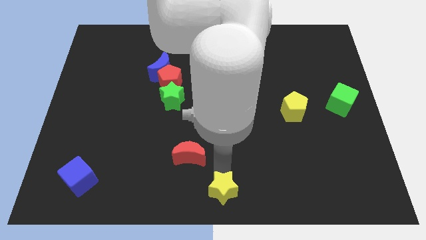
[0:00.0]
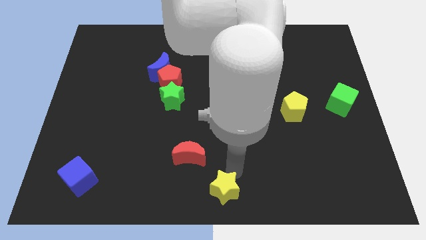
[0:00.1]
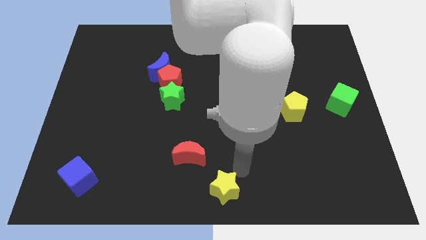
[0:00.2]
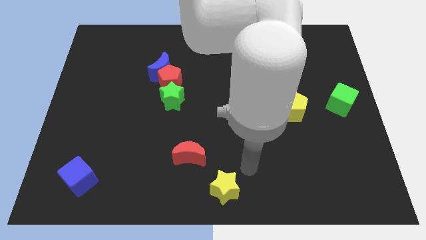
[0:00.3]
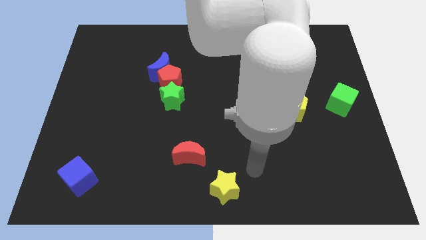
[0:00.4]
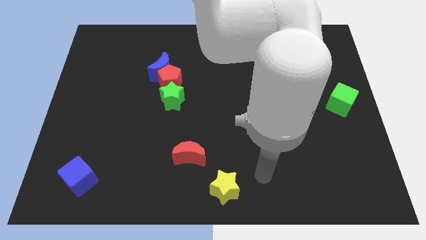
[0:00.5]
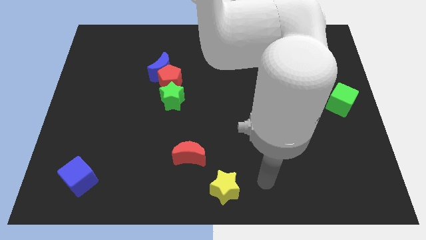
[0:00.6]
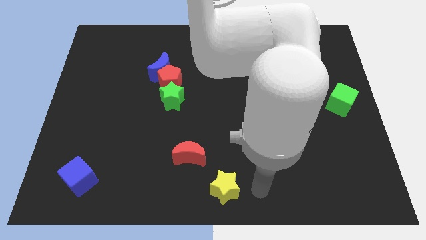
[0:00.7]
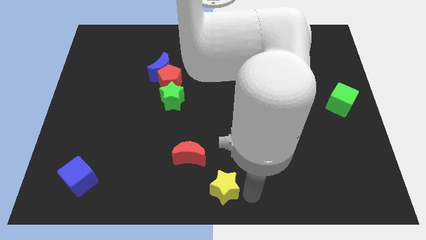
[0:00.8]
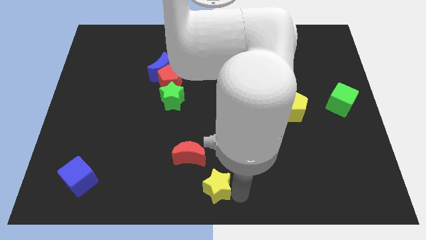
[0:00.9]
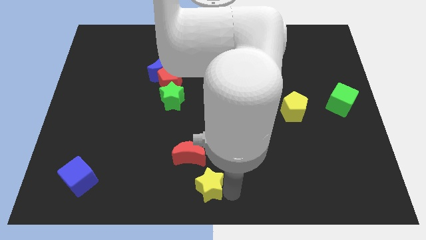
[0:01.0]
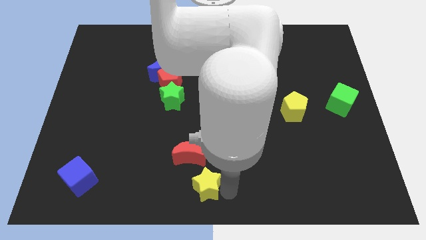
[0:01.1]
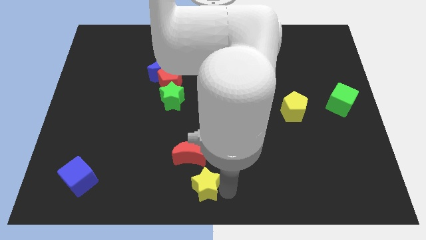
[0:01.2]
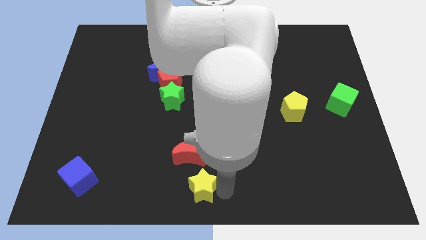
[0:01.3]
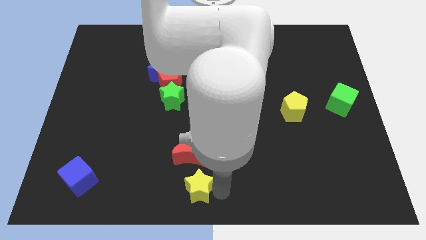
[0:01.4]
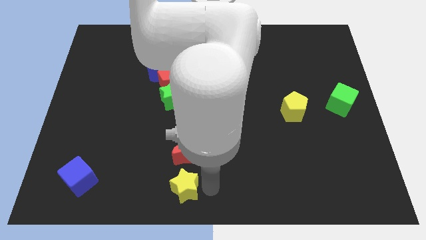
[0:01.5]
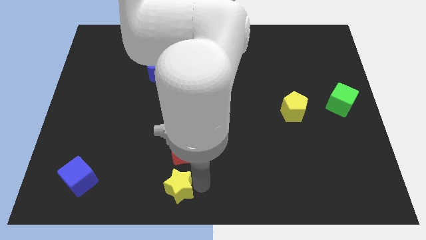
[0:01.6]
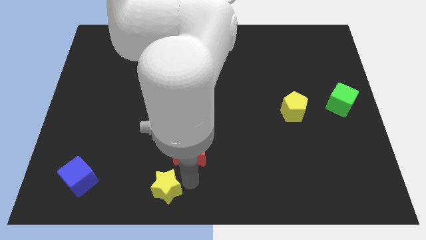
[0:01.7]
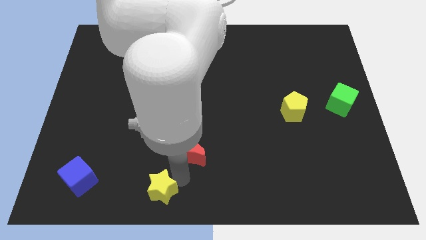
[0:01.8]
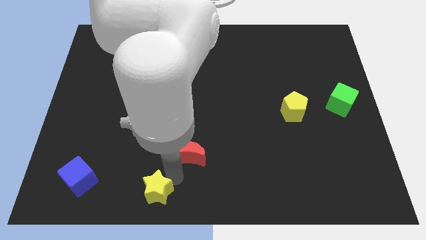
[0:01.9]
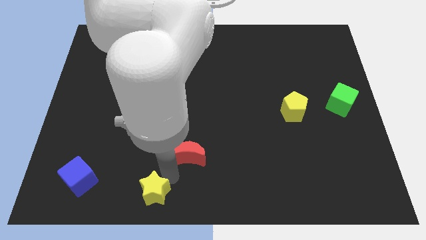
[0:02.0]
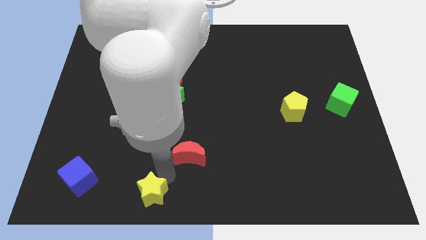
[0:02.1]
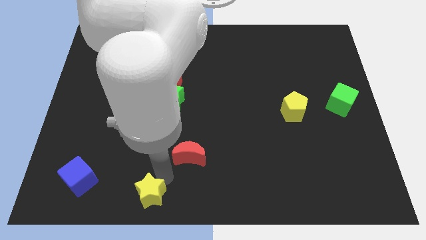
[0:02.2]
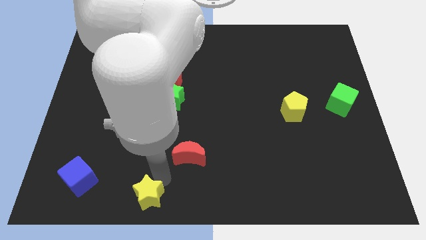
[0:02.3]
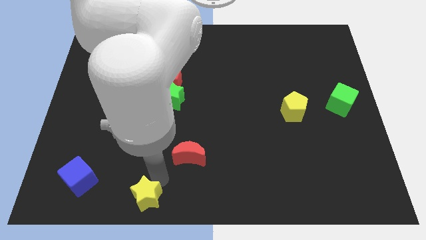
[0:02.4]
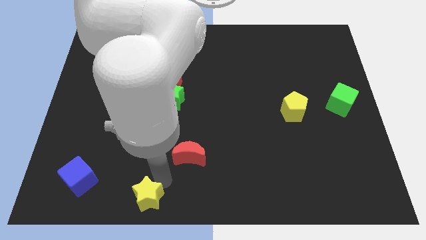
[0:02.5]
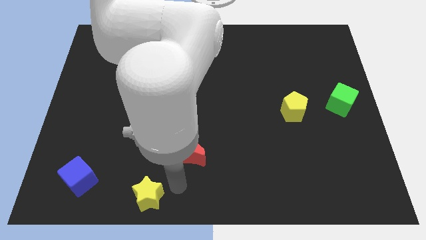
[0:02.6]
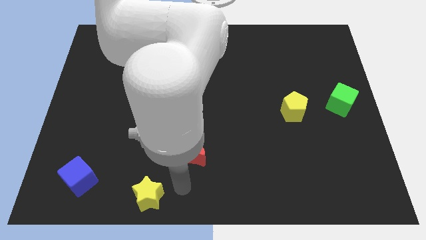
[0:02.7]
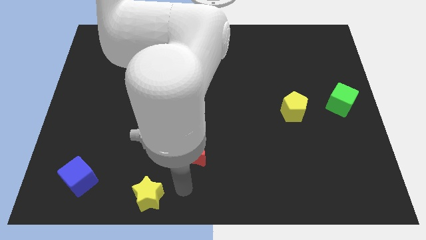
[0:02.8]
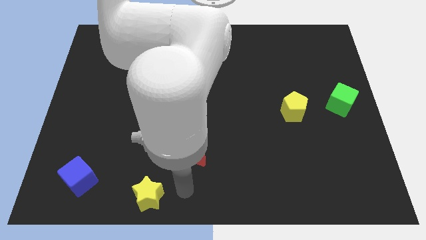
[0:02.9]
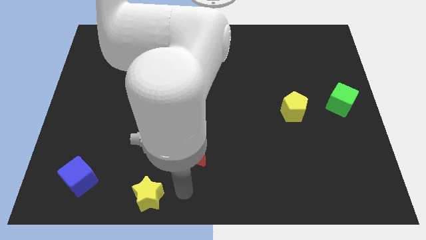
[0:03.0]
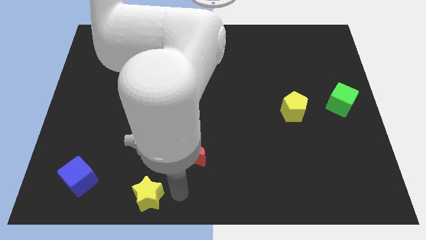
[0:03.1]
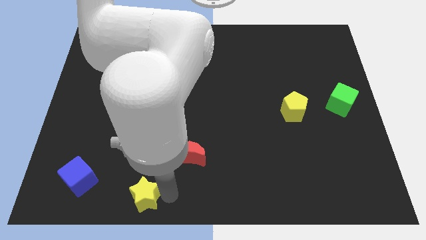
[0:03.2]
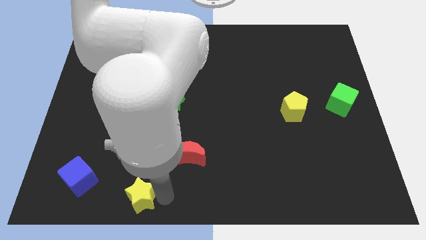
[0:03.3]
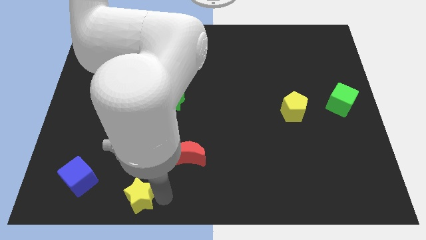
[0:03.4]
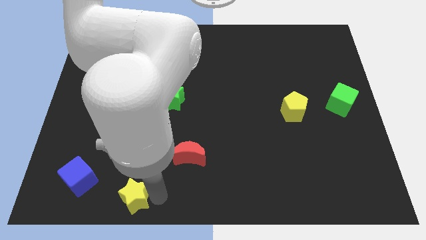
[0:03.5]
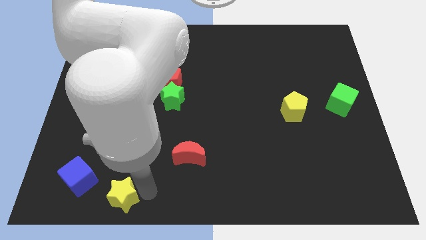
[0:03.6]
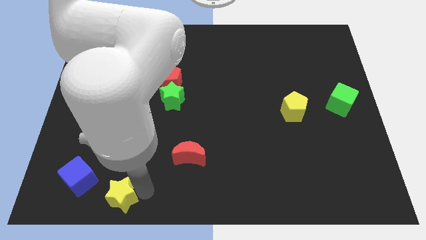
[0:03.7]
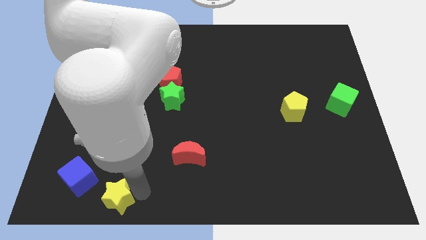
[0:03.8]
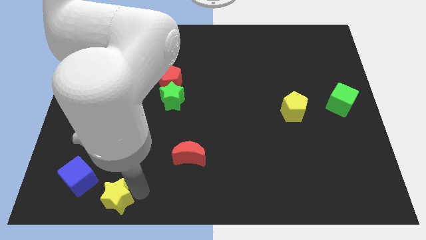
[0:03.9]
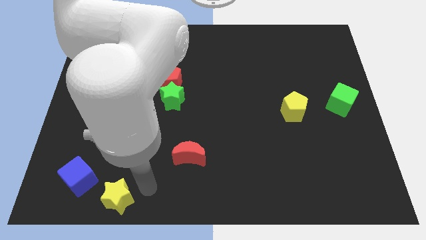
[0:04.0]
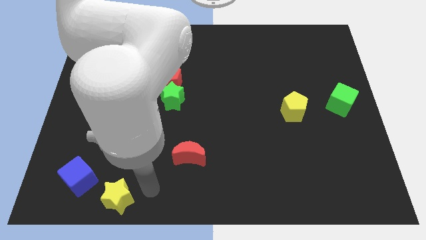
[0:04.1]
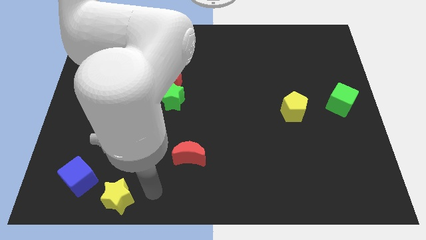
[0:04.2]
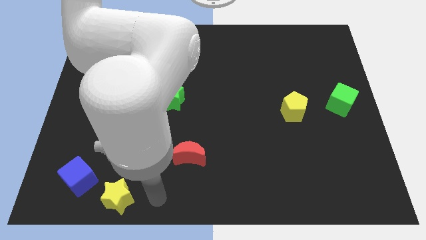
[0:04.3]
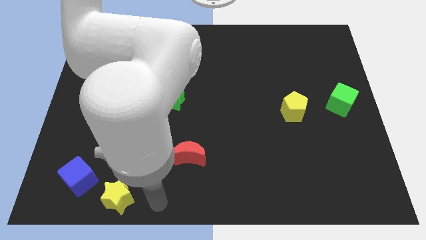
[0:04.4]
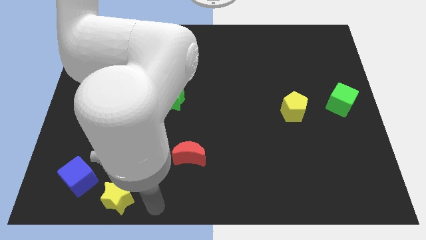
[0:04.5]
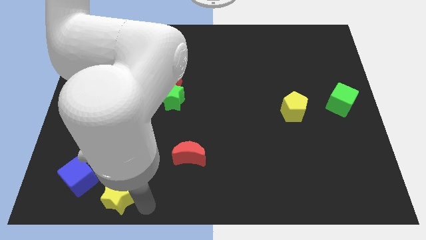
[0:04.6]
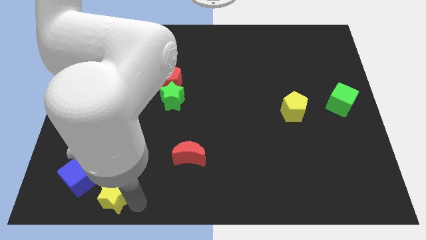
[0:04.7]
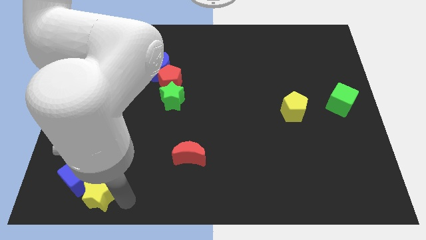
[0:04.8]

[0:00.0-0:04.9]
place the yellow star below the blue cube

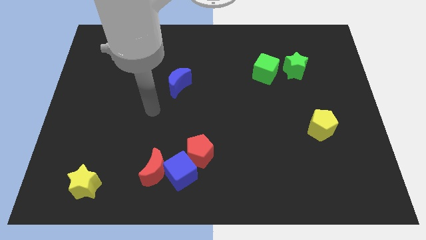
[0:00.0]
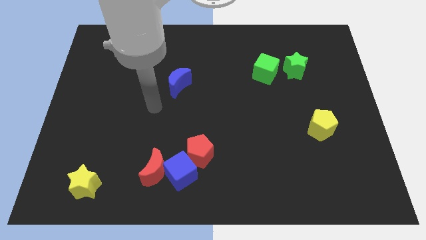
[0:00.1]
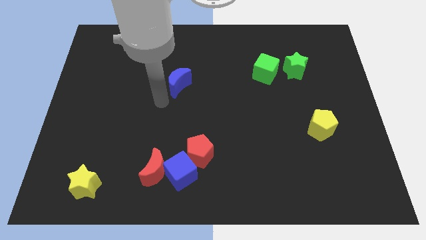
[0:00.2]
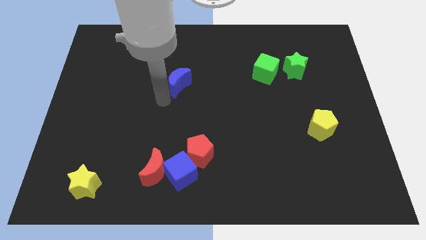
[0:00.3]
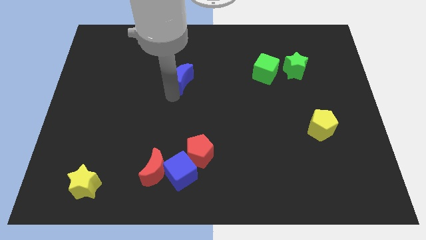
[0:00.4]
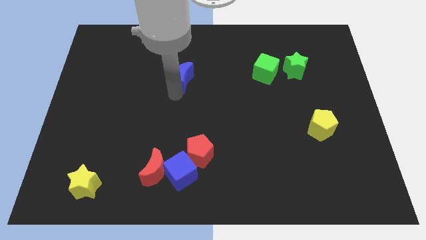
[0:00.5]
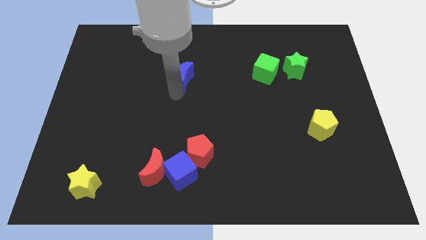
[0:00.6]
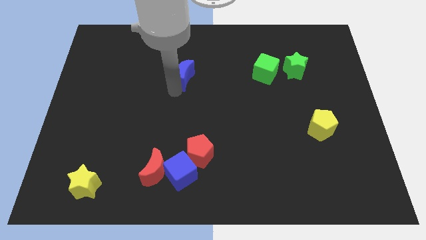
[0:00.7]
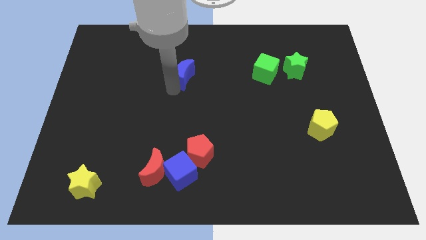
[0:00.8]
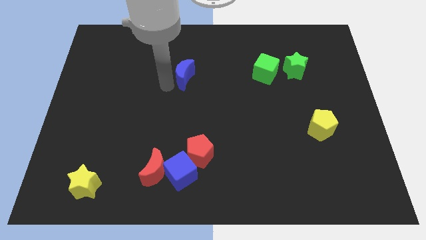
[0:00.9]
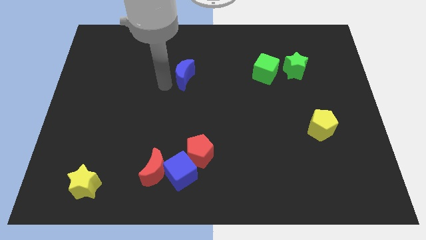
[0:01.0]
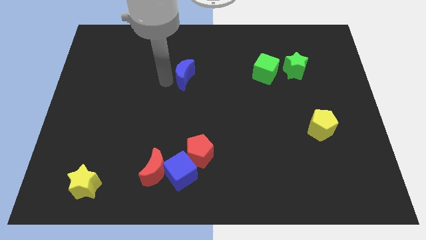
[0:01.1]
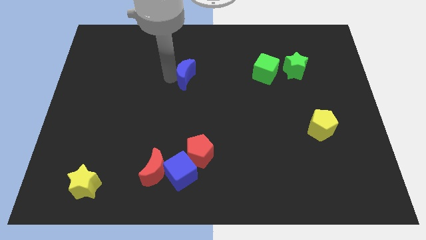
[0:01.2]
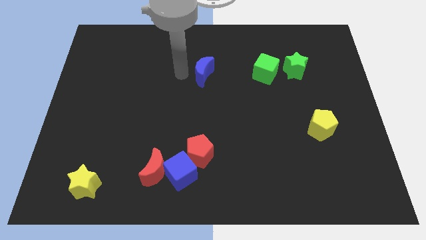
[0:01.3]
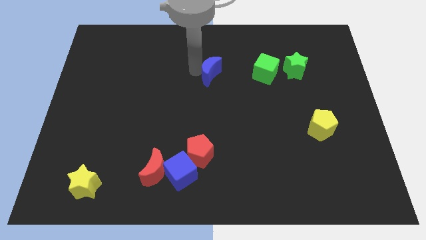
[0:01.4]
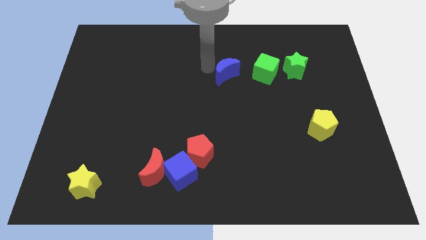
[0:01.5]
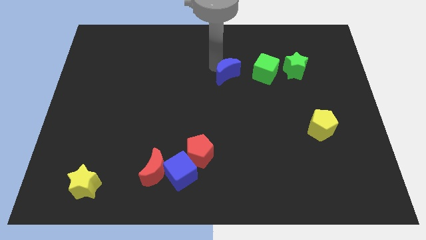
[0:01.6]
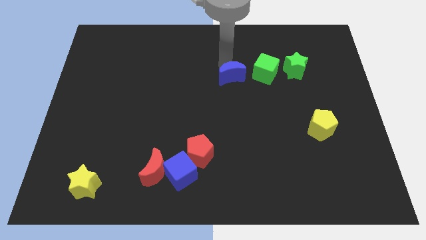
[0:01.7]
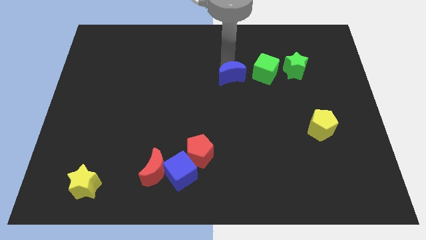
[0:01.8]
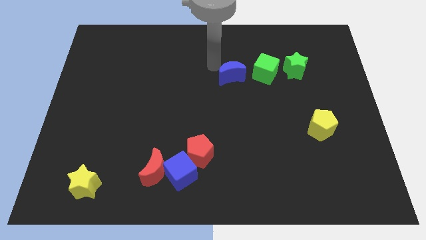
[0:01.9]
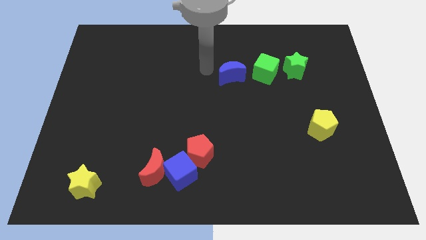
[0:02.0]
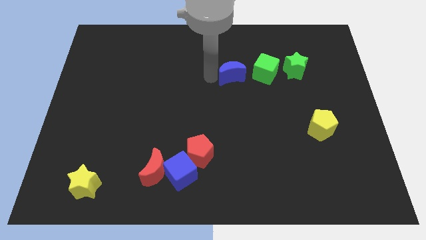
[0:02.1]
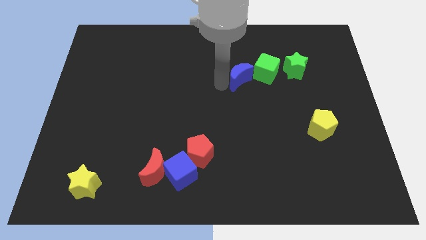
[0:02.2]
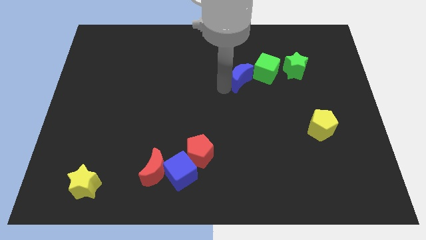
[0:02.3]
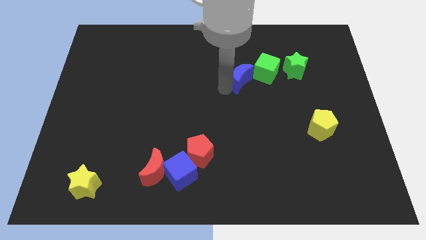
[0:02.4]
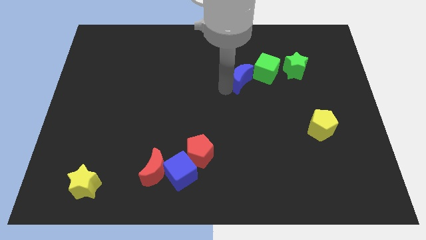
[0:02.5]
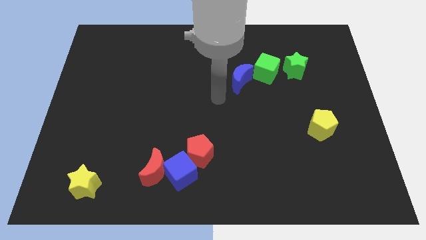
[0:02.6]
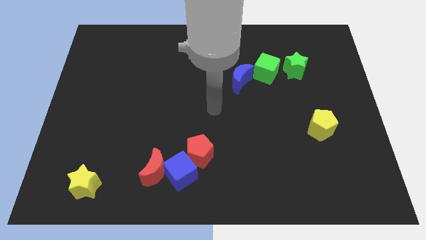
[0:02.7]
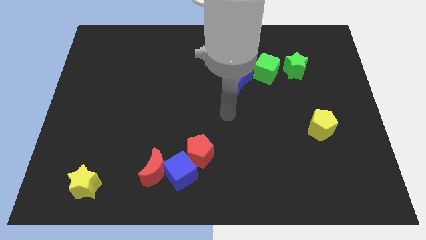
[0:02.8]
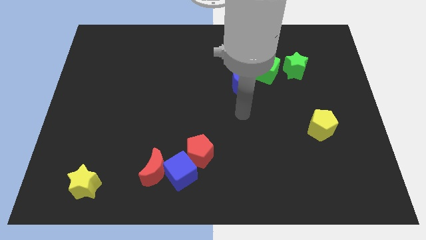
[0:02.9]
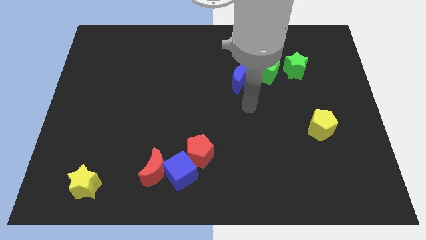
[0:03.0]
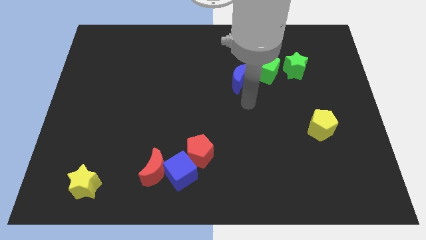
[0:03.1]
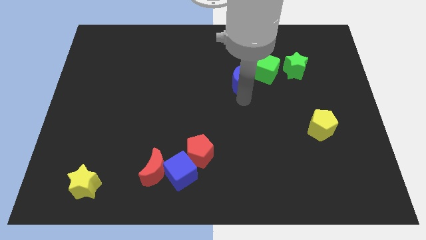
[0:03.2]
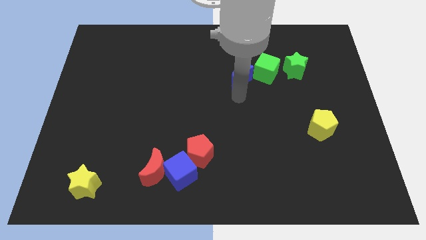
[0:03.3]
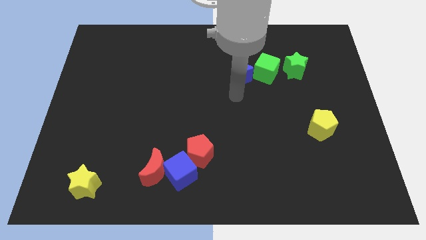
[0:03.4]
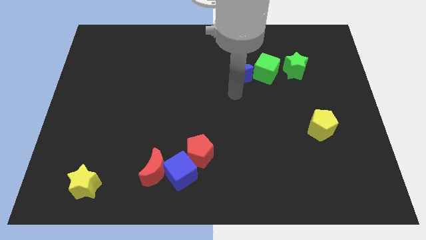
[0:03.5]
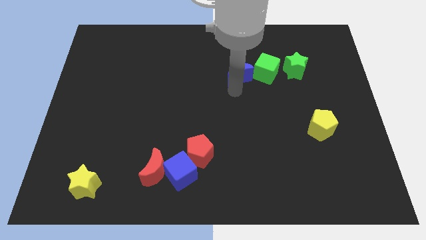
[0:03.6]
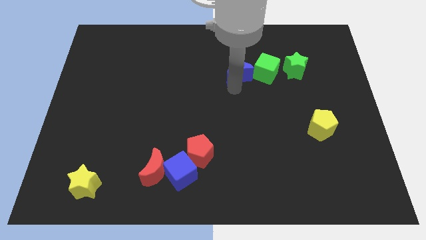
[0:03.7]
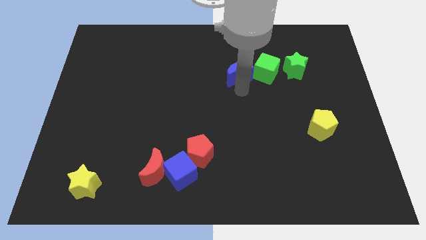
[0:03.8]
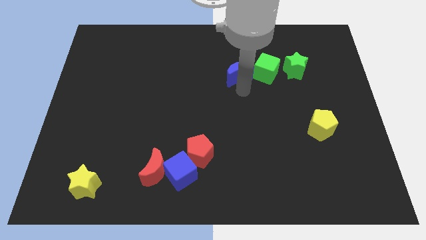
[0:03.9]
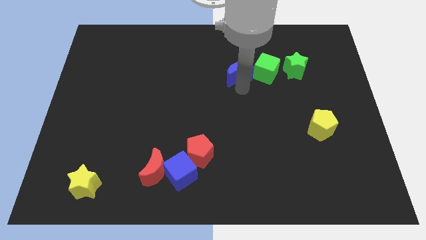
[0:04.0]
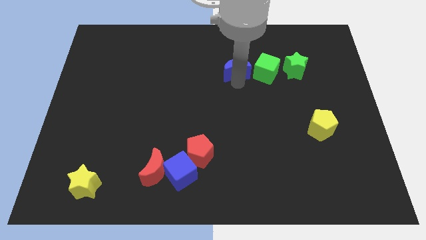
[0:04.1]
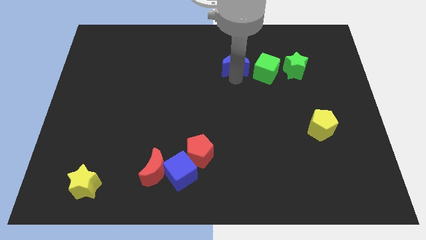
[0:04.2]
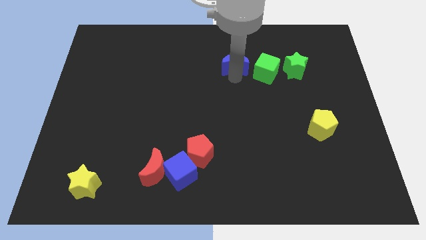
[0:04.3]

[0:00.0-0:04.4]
place the blue moon left to the green cube
